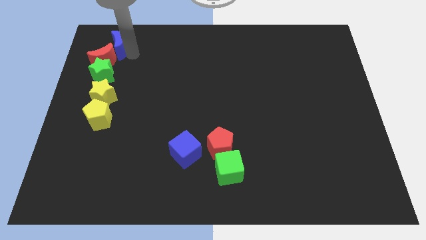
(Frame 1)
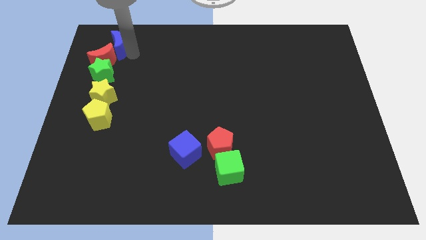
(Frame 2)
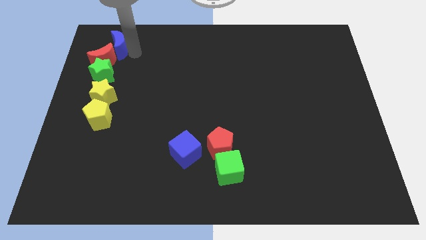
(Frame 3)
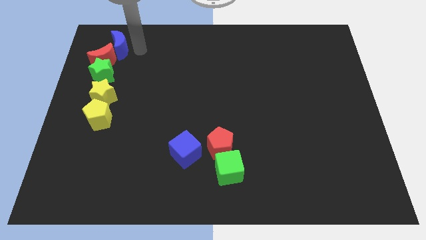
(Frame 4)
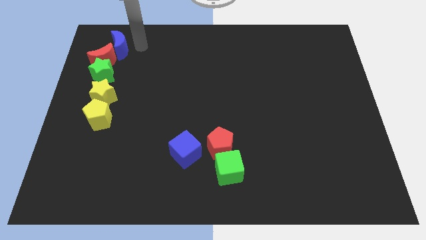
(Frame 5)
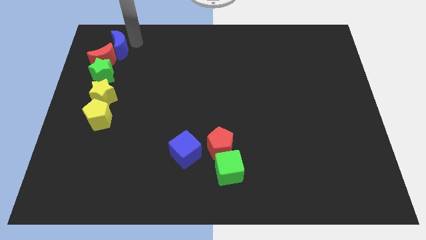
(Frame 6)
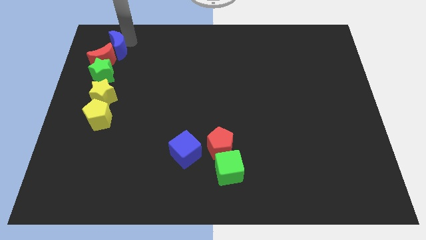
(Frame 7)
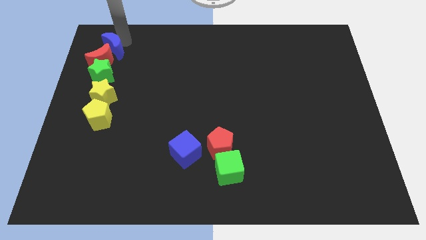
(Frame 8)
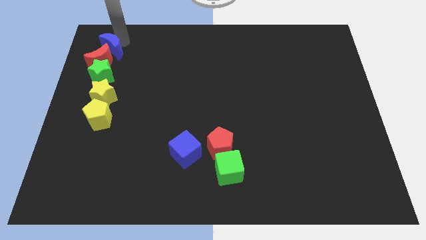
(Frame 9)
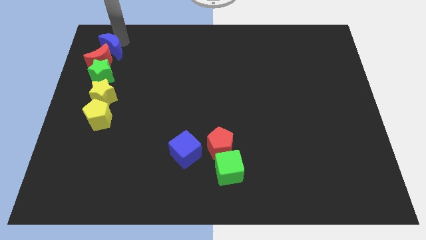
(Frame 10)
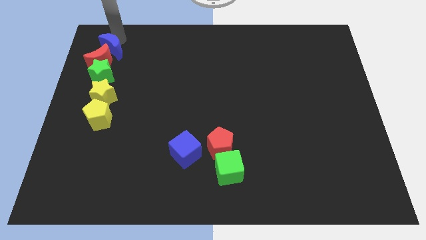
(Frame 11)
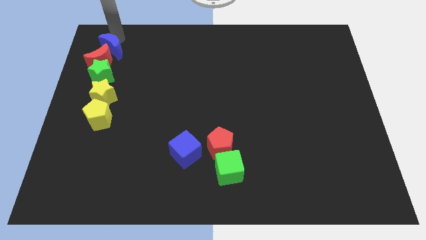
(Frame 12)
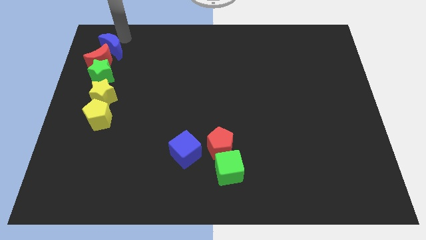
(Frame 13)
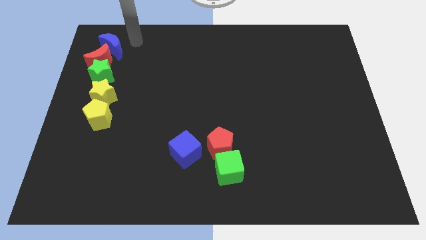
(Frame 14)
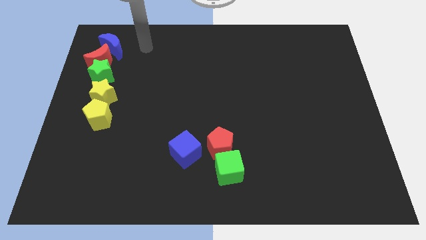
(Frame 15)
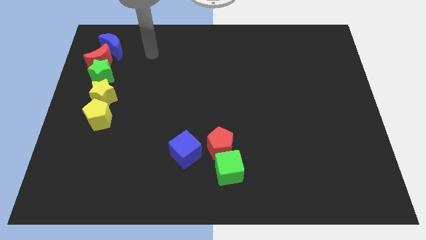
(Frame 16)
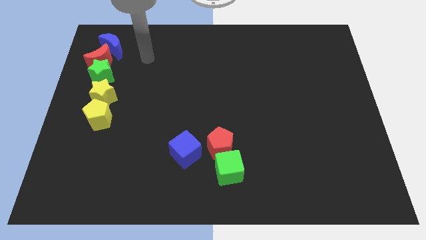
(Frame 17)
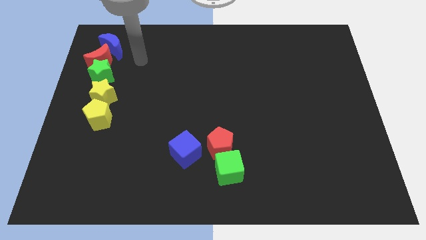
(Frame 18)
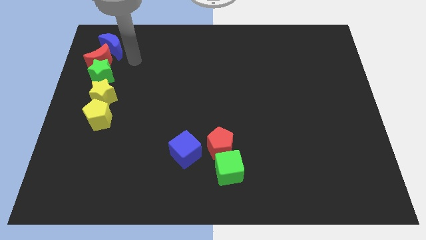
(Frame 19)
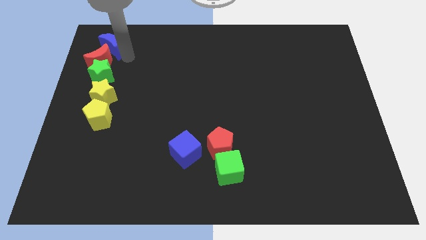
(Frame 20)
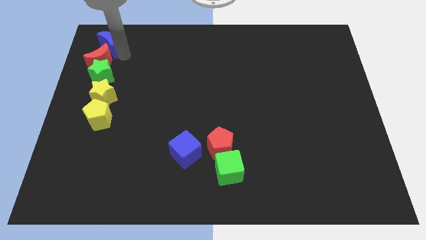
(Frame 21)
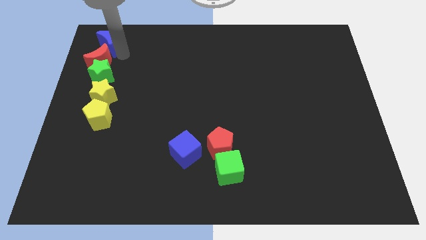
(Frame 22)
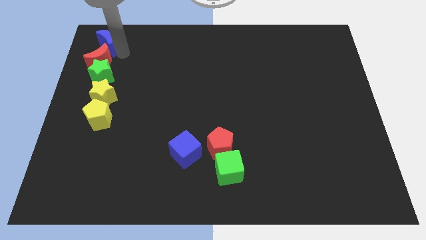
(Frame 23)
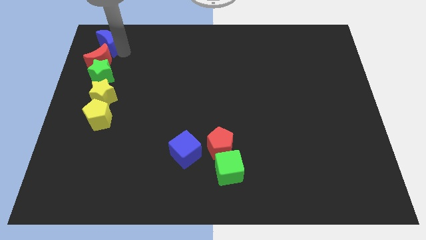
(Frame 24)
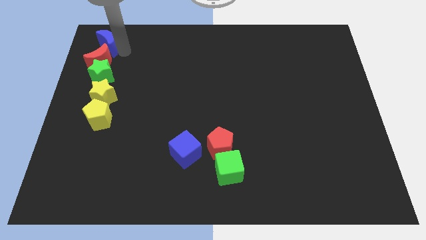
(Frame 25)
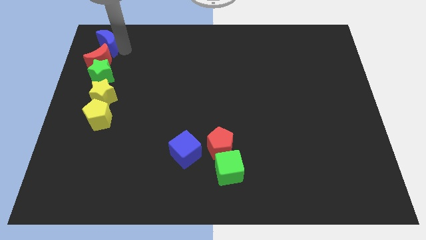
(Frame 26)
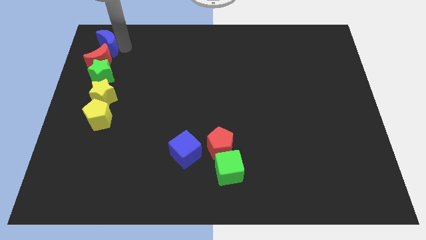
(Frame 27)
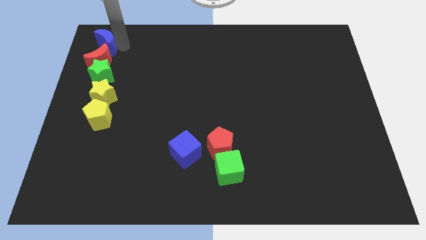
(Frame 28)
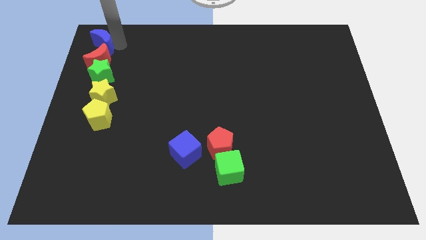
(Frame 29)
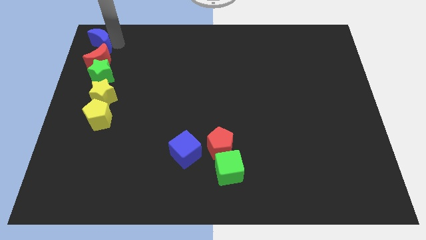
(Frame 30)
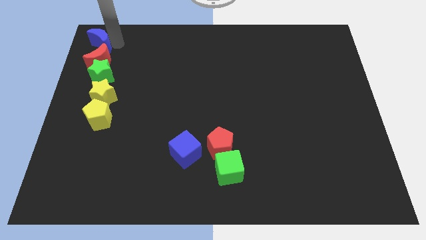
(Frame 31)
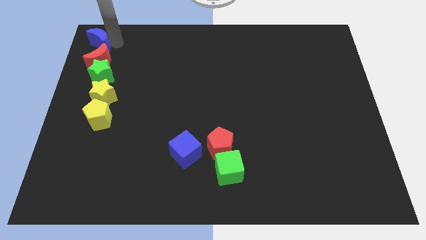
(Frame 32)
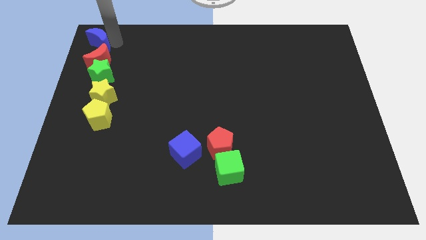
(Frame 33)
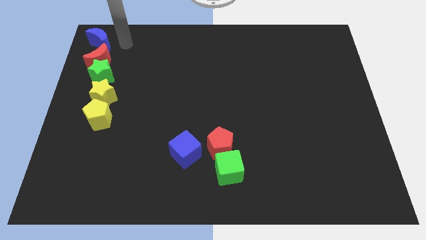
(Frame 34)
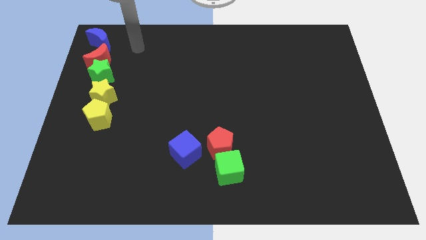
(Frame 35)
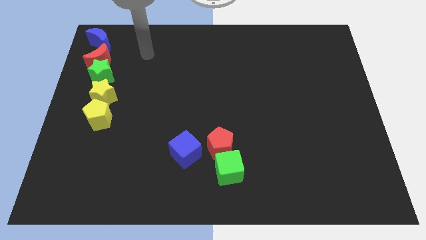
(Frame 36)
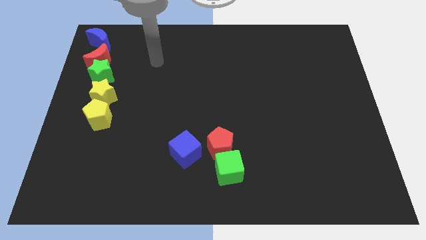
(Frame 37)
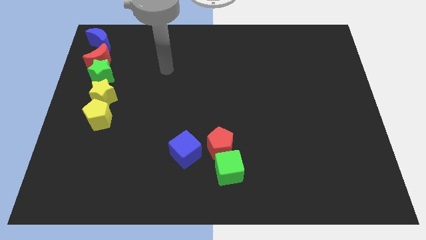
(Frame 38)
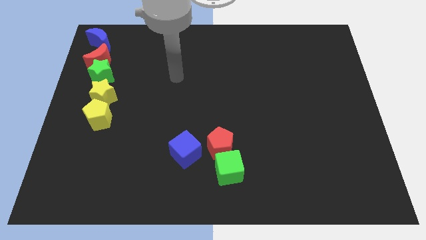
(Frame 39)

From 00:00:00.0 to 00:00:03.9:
place the blue moon above the red moon

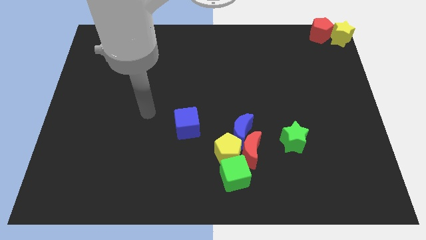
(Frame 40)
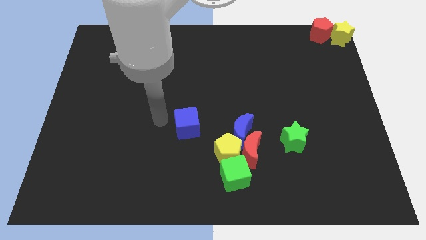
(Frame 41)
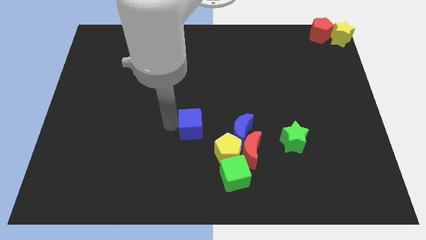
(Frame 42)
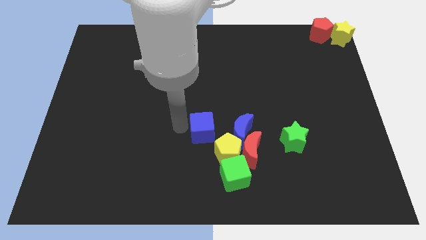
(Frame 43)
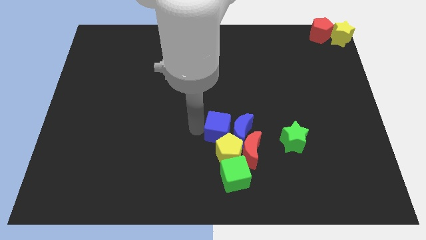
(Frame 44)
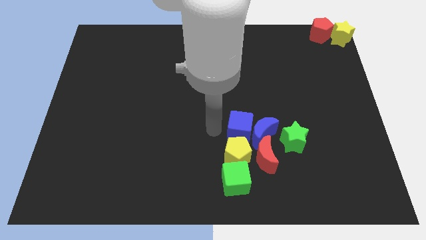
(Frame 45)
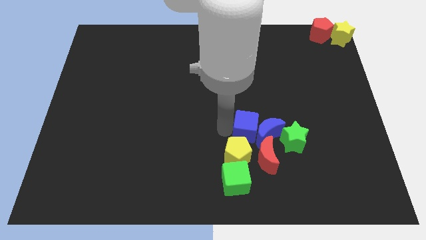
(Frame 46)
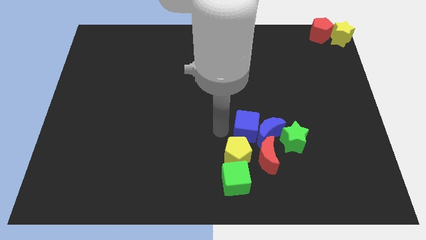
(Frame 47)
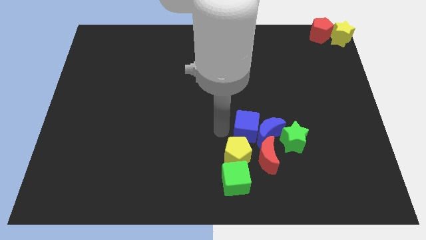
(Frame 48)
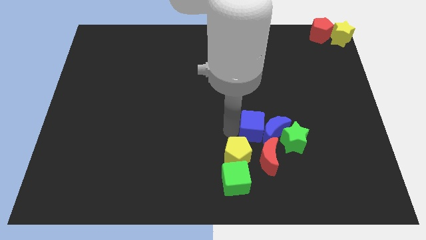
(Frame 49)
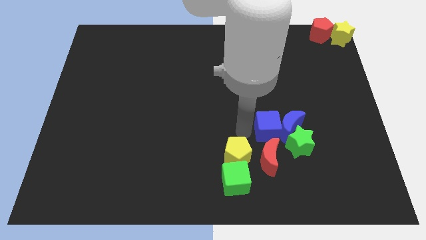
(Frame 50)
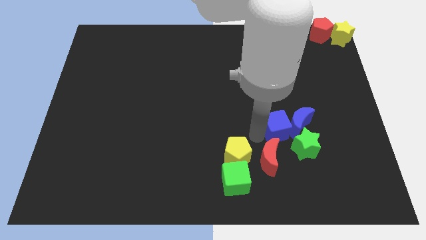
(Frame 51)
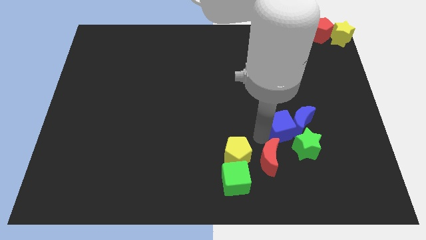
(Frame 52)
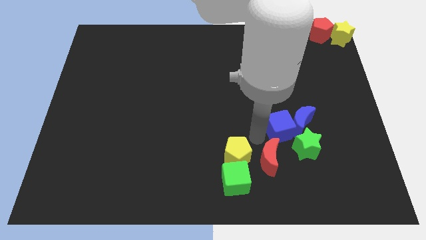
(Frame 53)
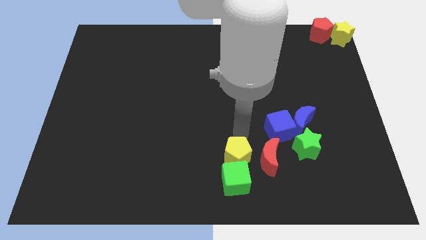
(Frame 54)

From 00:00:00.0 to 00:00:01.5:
move the blue cube into the blue crescent

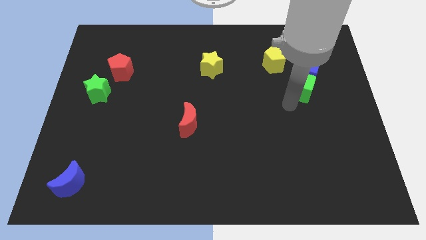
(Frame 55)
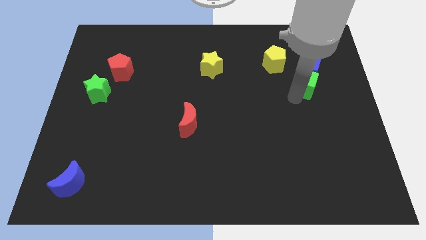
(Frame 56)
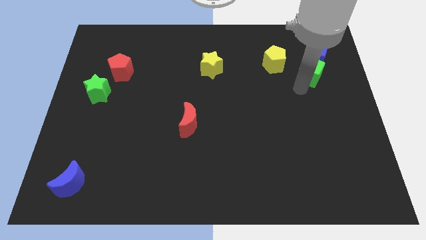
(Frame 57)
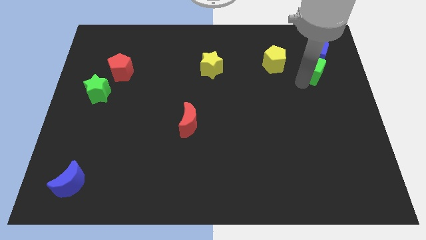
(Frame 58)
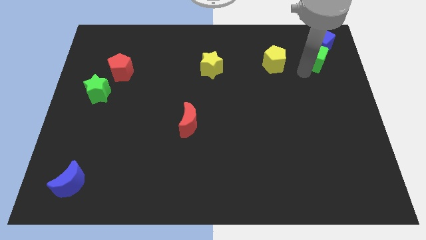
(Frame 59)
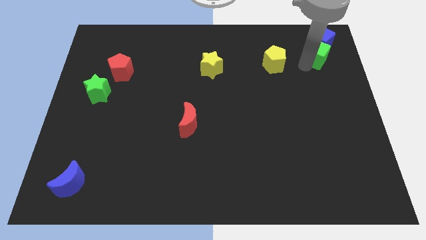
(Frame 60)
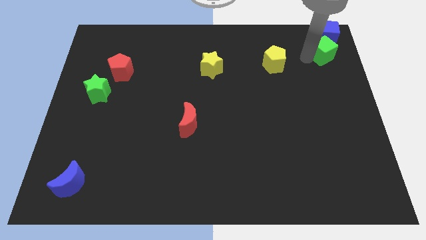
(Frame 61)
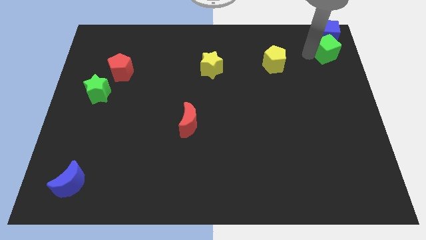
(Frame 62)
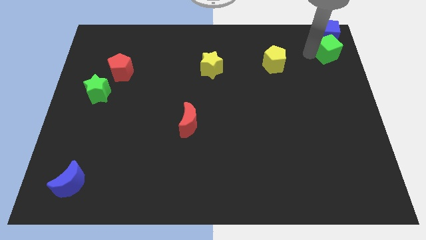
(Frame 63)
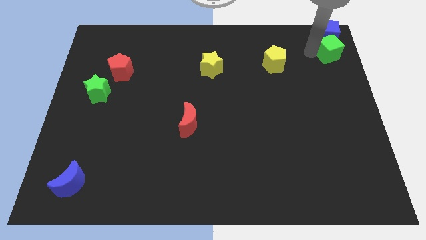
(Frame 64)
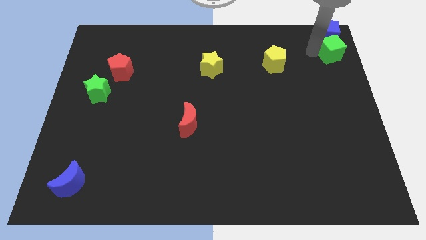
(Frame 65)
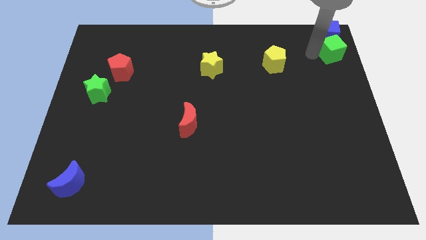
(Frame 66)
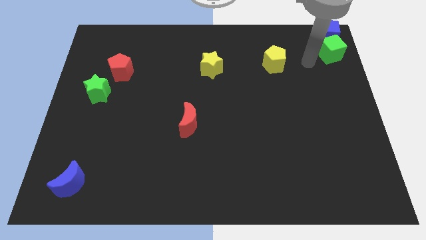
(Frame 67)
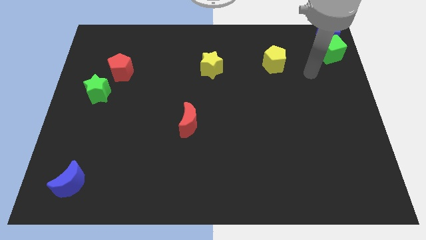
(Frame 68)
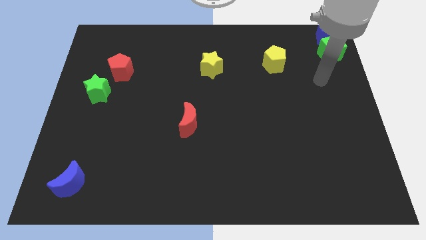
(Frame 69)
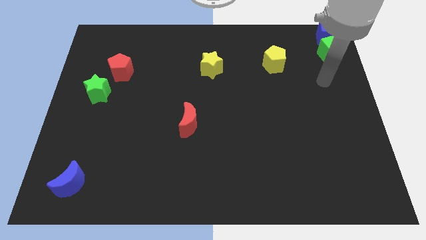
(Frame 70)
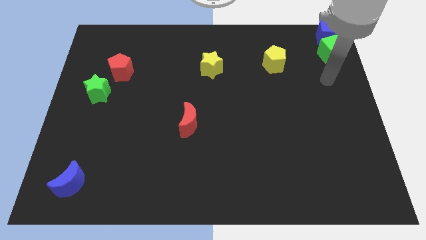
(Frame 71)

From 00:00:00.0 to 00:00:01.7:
move the green cube and blue cube at the top right corner of the board

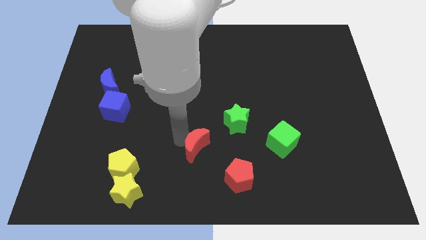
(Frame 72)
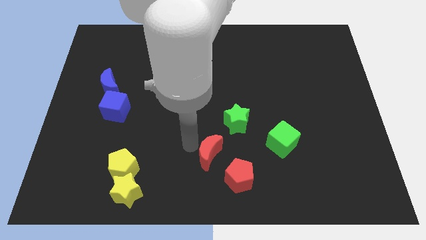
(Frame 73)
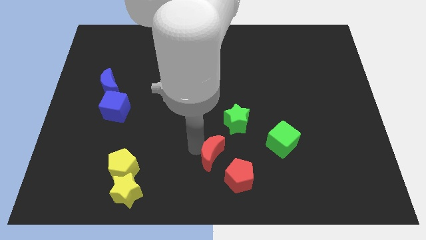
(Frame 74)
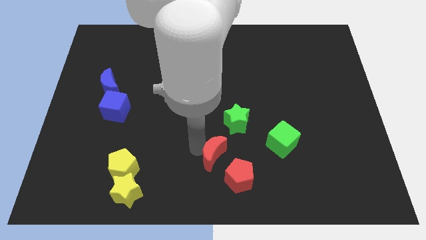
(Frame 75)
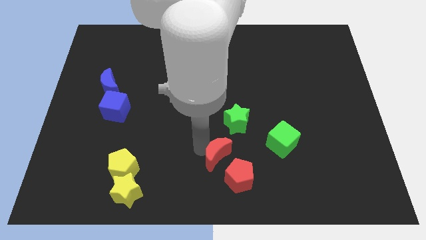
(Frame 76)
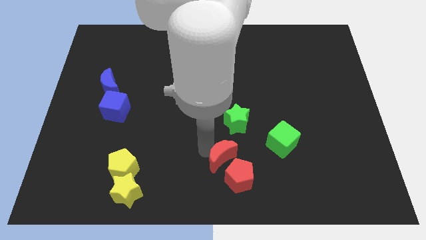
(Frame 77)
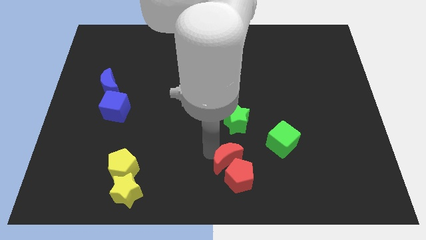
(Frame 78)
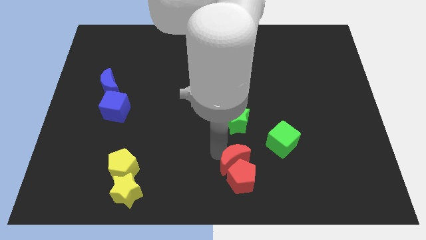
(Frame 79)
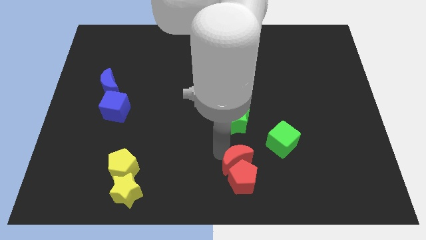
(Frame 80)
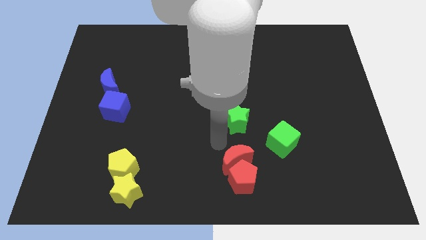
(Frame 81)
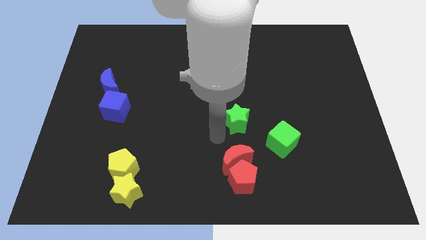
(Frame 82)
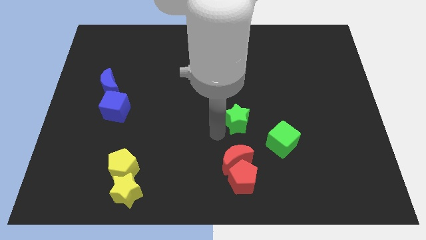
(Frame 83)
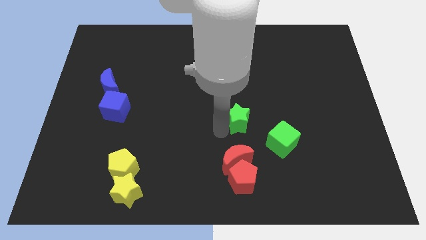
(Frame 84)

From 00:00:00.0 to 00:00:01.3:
move red crescent into the red pentagon

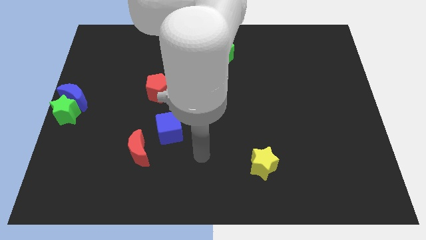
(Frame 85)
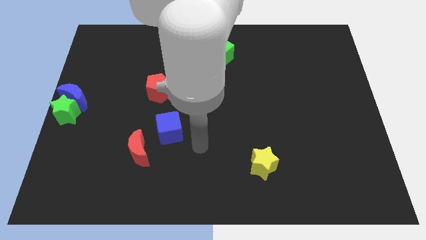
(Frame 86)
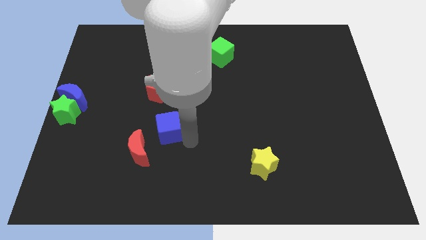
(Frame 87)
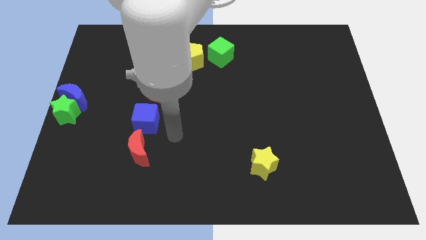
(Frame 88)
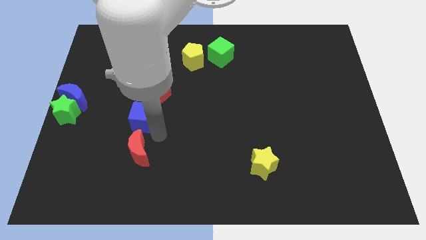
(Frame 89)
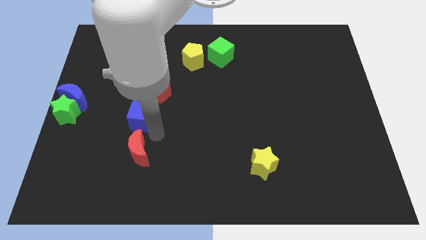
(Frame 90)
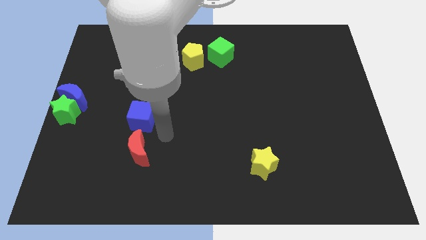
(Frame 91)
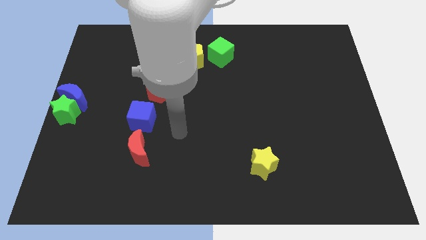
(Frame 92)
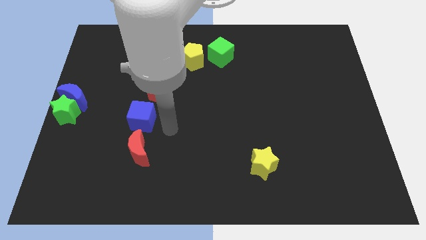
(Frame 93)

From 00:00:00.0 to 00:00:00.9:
place blue cube between red pentagon and red crescent
